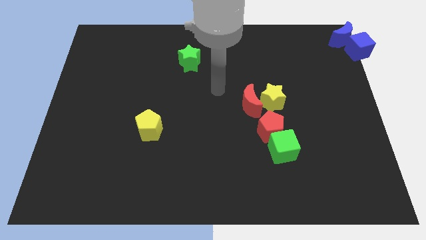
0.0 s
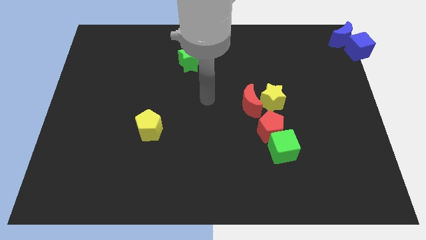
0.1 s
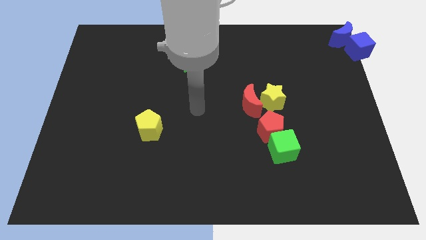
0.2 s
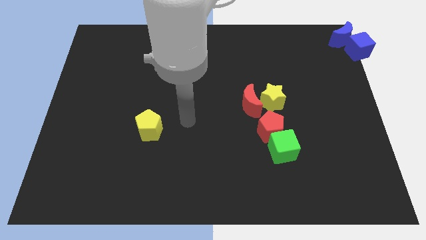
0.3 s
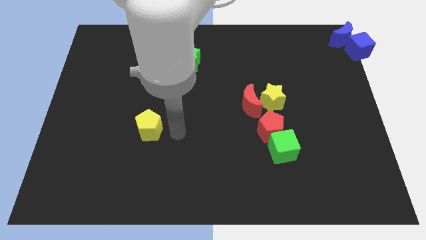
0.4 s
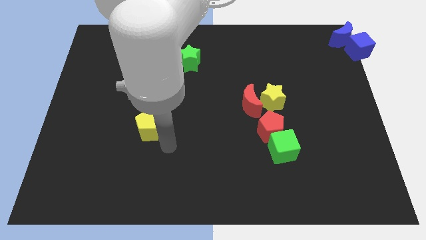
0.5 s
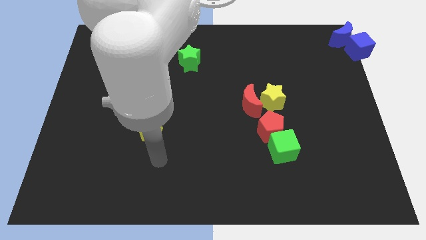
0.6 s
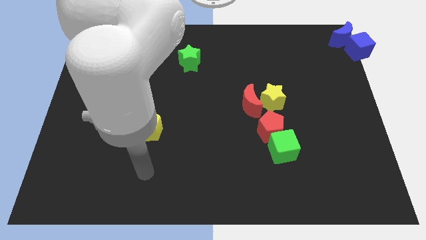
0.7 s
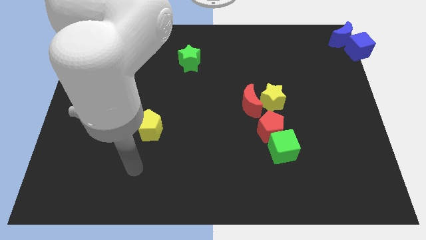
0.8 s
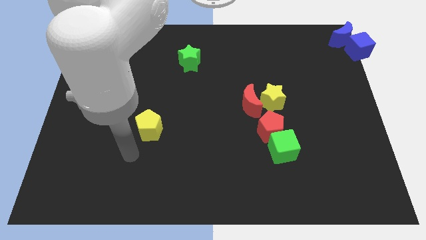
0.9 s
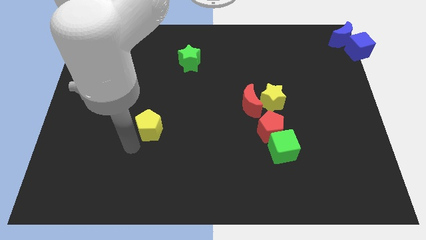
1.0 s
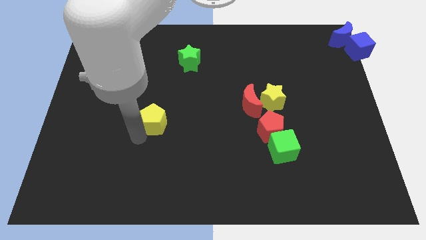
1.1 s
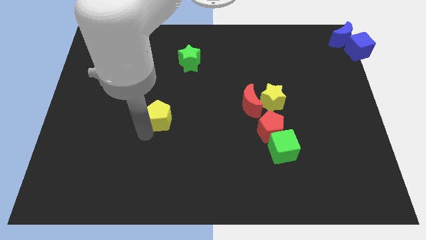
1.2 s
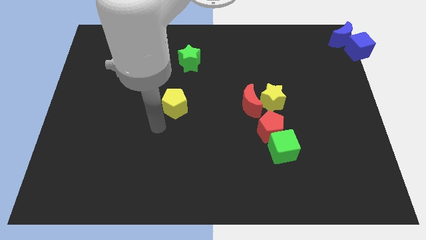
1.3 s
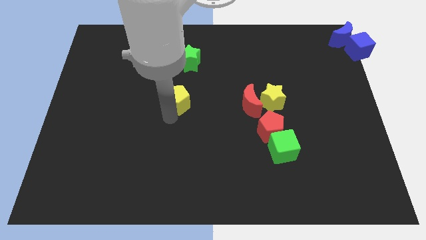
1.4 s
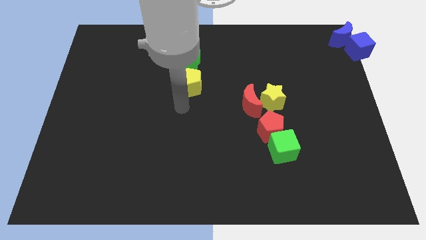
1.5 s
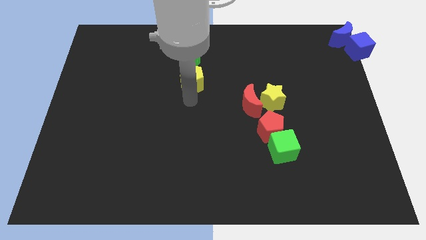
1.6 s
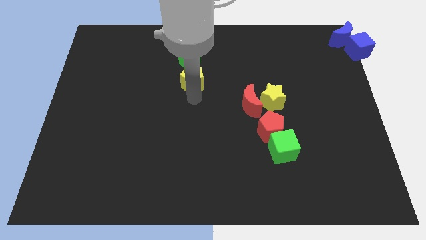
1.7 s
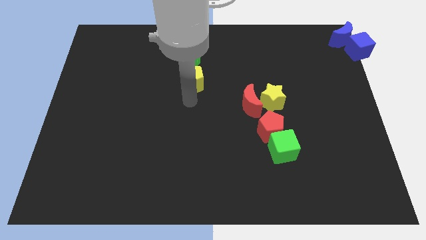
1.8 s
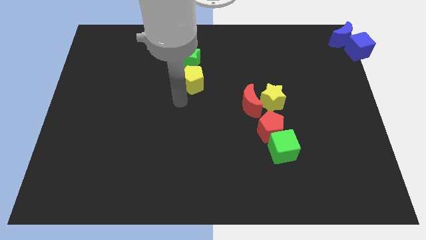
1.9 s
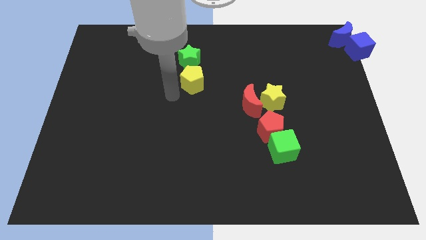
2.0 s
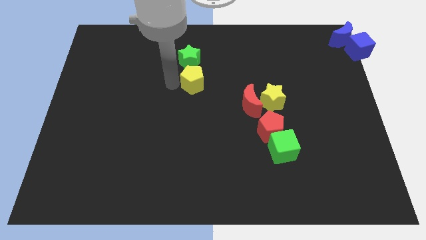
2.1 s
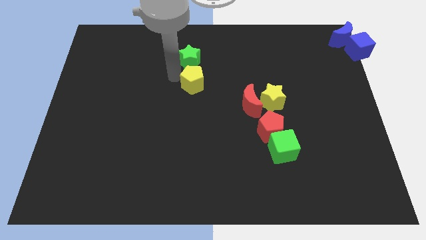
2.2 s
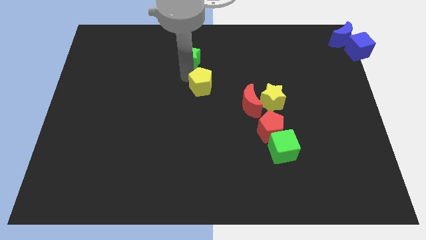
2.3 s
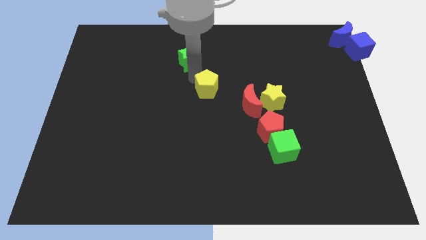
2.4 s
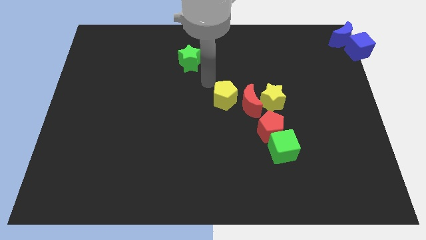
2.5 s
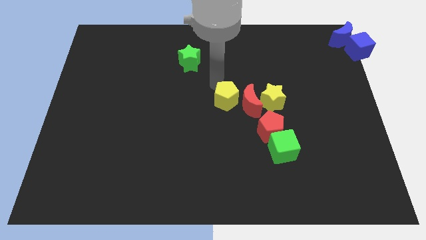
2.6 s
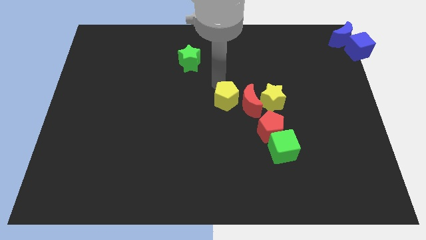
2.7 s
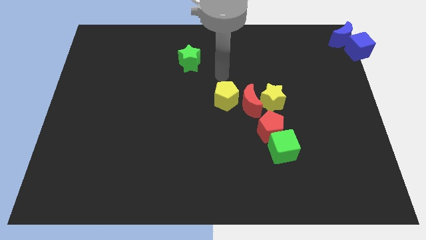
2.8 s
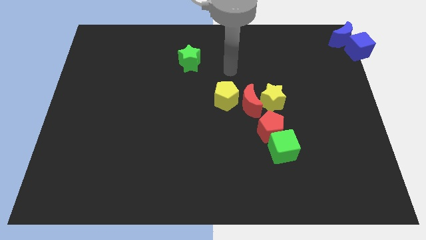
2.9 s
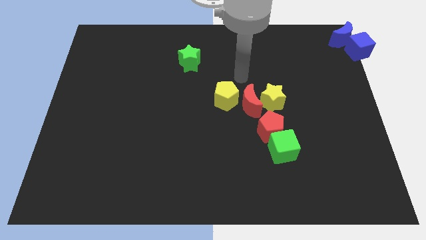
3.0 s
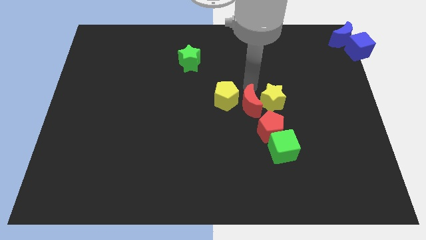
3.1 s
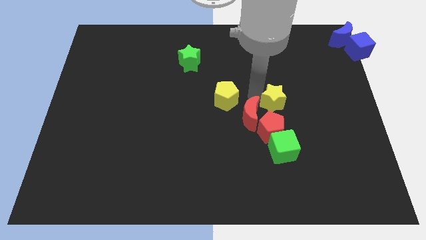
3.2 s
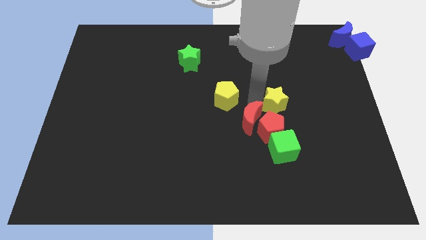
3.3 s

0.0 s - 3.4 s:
push the yellow pentagon to the center of the board

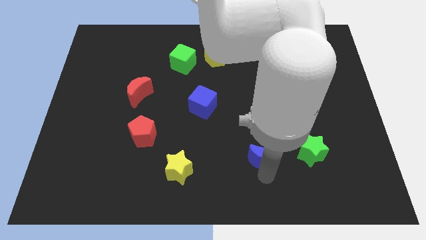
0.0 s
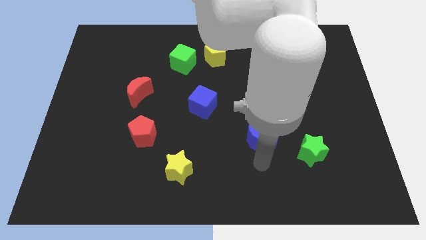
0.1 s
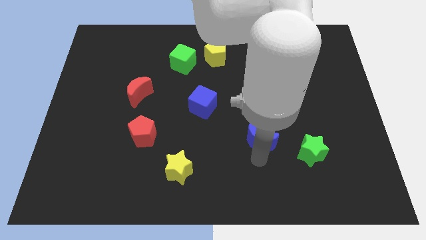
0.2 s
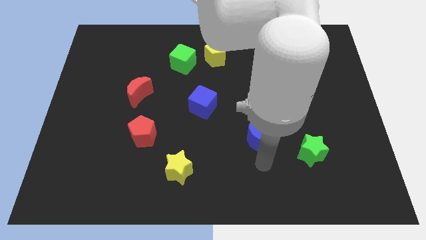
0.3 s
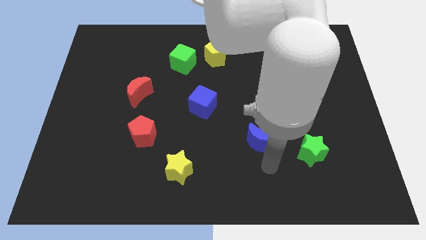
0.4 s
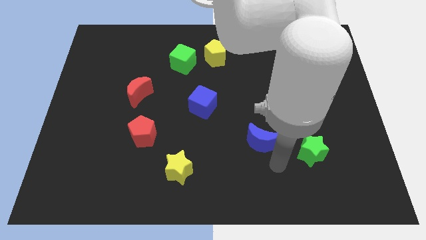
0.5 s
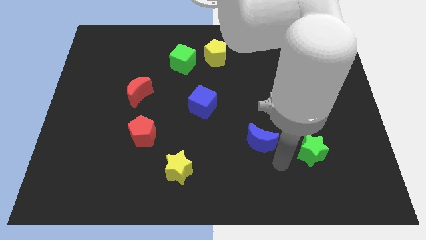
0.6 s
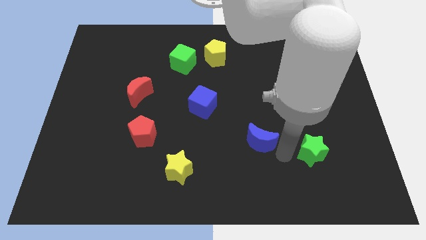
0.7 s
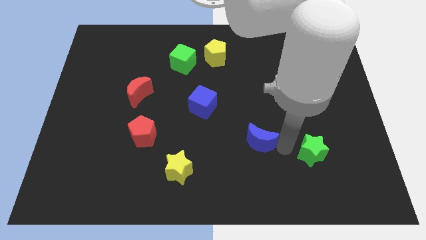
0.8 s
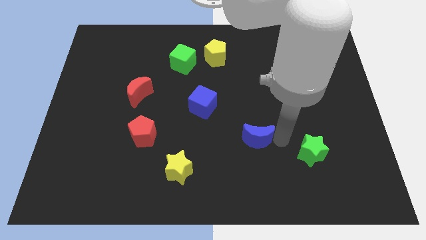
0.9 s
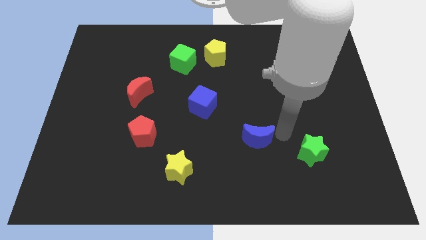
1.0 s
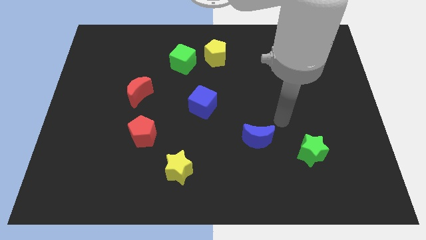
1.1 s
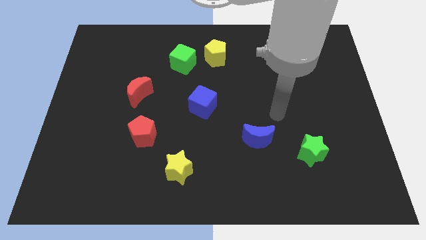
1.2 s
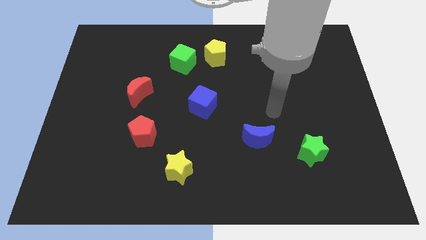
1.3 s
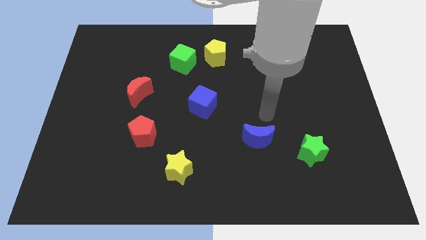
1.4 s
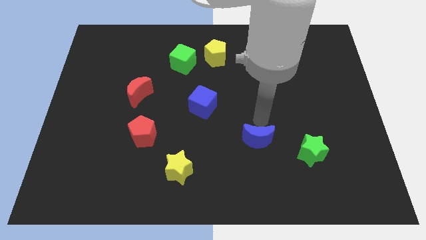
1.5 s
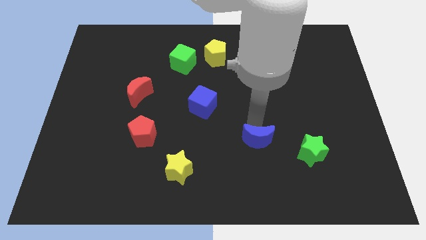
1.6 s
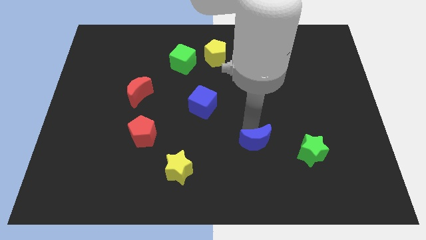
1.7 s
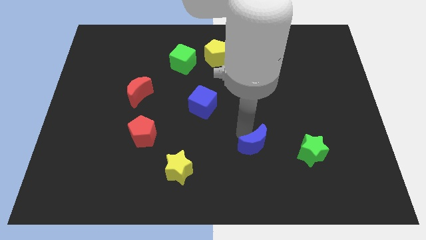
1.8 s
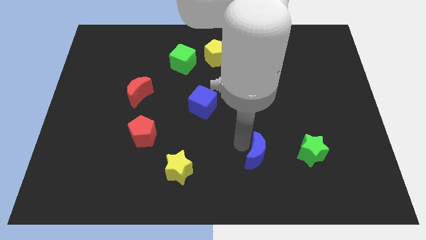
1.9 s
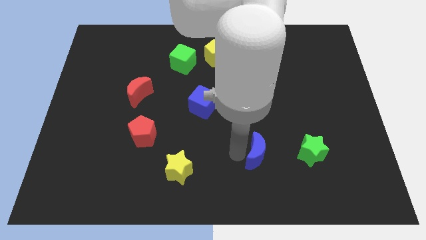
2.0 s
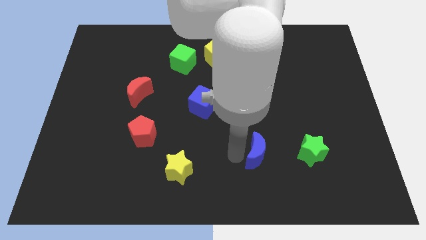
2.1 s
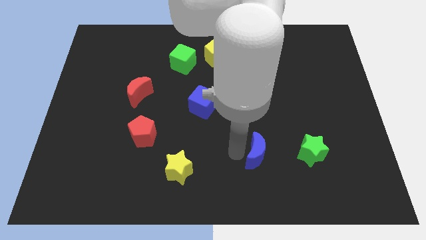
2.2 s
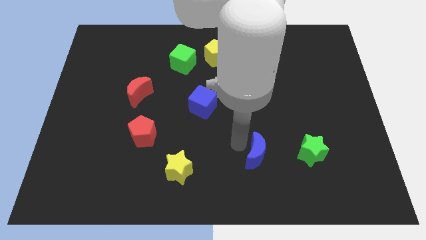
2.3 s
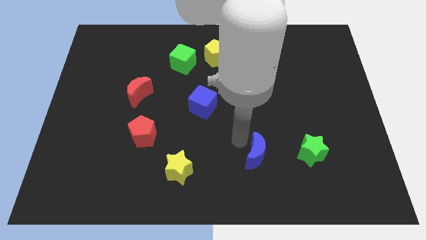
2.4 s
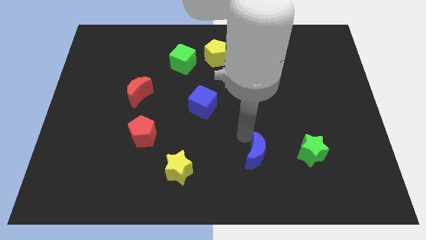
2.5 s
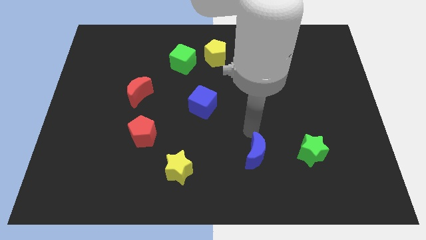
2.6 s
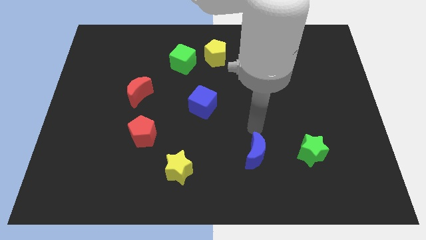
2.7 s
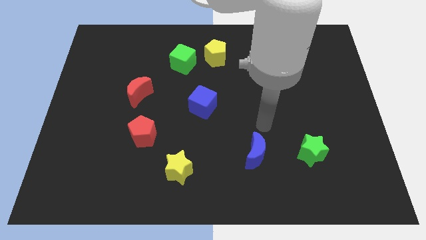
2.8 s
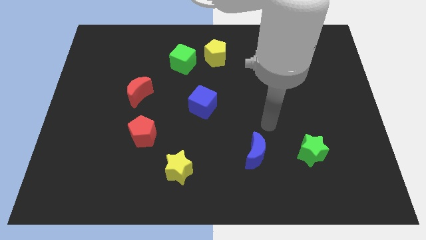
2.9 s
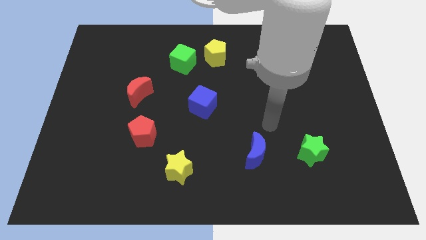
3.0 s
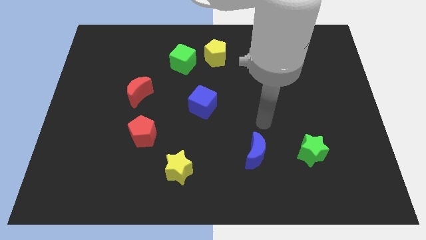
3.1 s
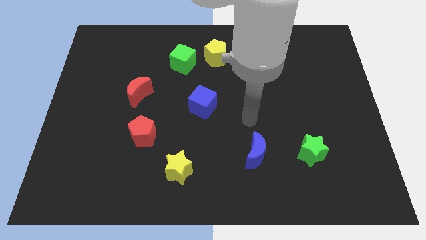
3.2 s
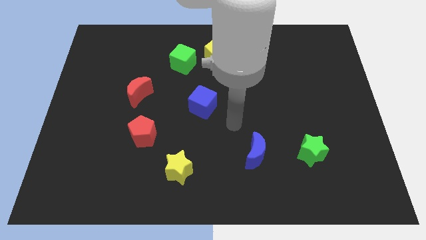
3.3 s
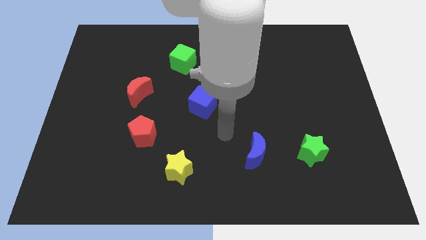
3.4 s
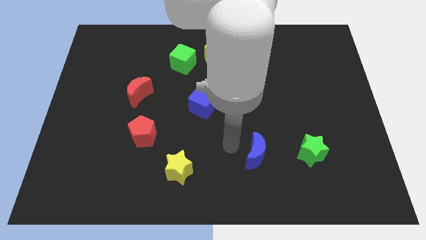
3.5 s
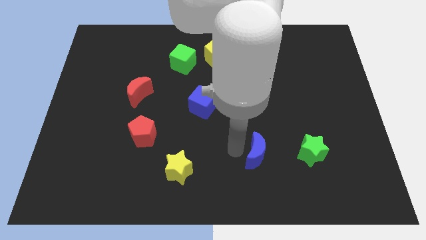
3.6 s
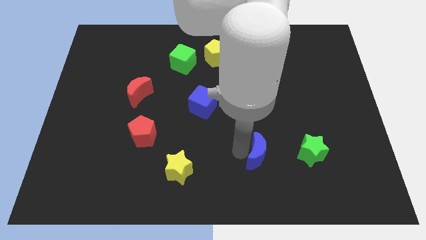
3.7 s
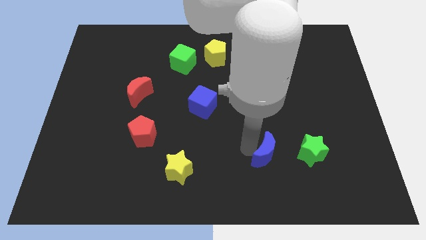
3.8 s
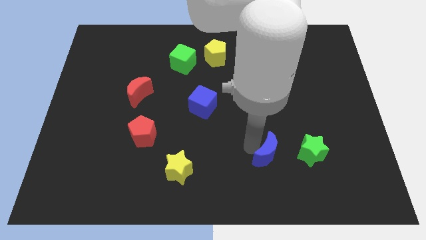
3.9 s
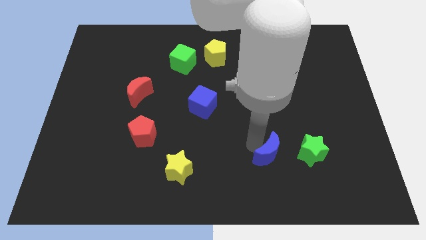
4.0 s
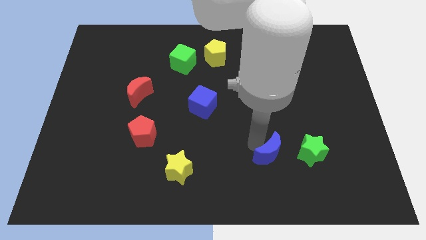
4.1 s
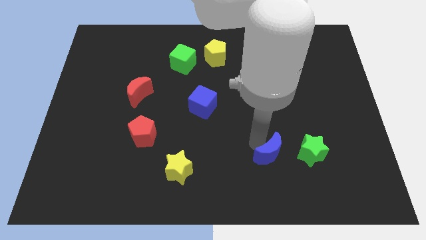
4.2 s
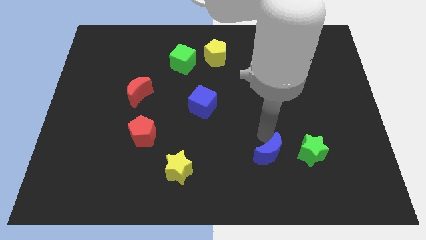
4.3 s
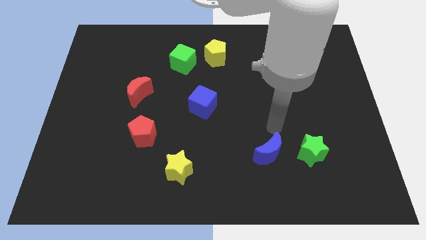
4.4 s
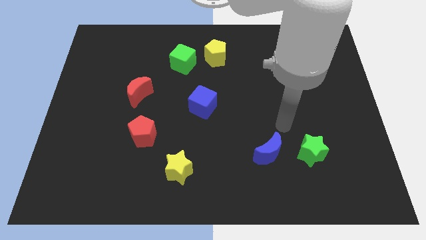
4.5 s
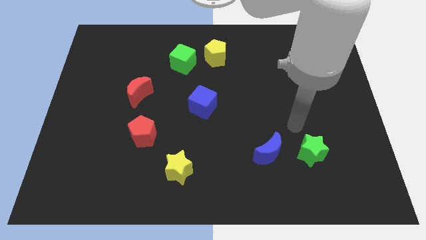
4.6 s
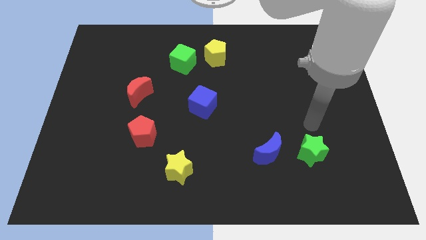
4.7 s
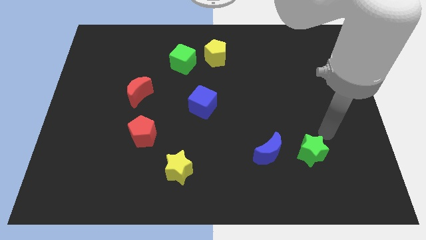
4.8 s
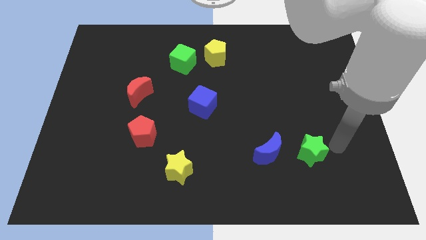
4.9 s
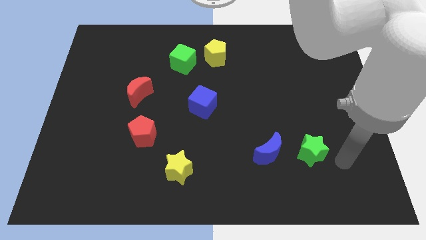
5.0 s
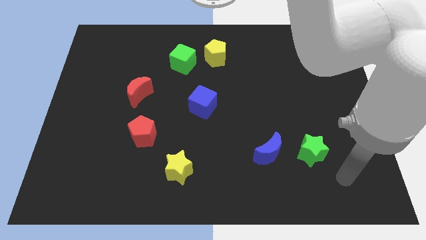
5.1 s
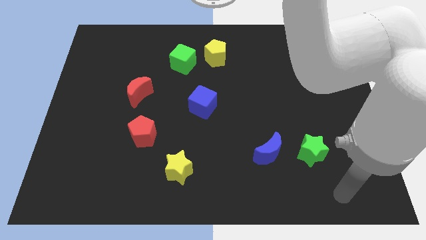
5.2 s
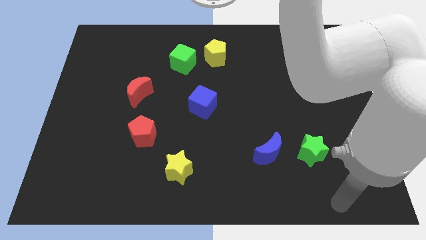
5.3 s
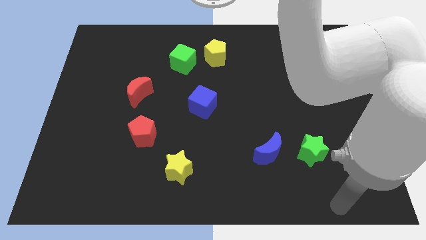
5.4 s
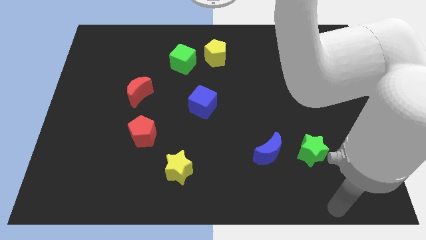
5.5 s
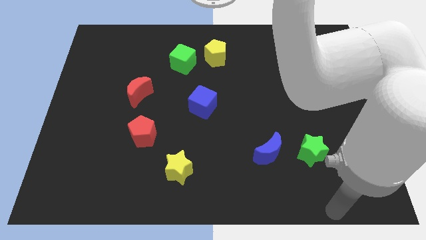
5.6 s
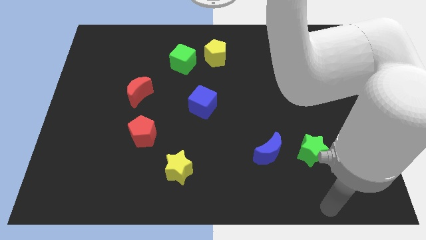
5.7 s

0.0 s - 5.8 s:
move the blue crescent towards the green star
